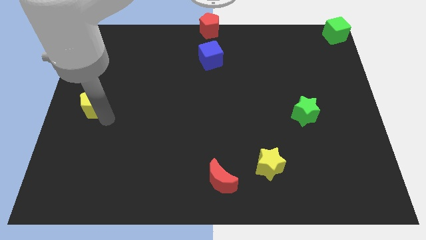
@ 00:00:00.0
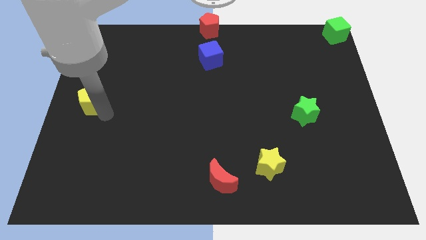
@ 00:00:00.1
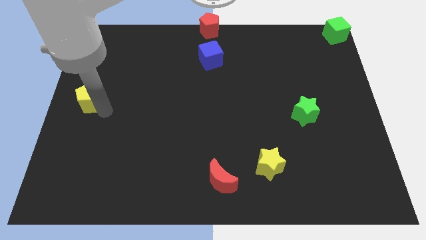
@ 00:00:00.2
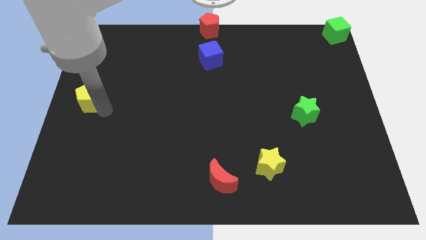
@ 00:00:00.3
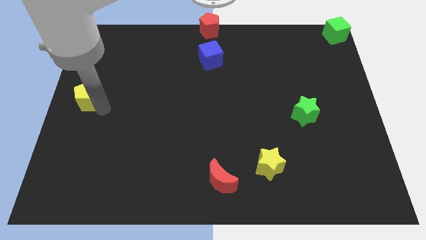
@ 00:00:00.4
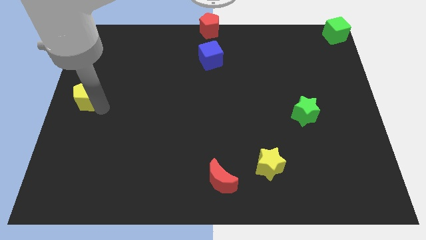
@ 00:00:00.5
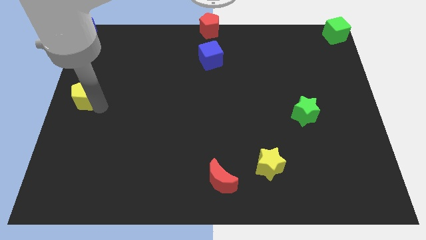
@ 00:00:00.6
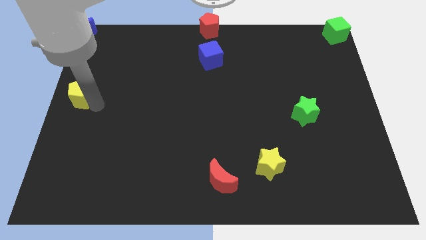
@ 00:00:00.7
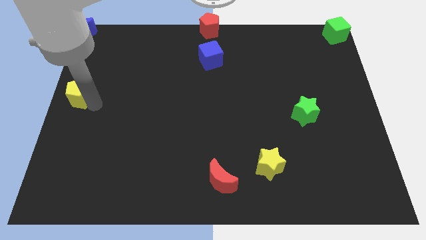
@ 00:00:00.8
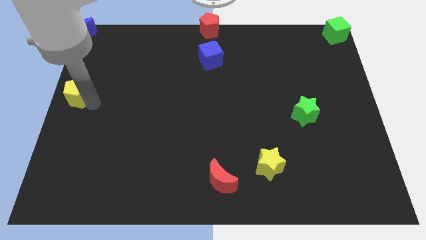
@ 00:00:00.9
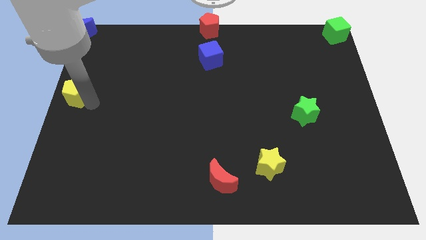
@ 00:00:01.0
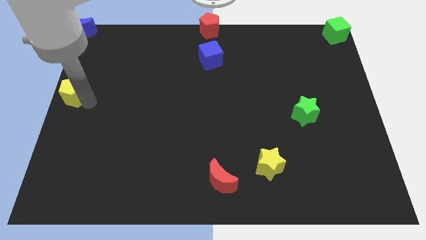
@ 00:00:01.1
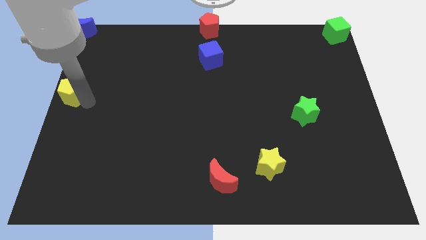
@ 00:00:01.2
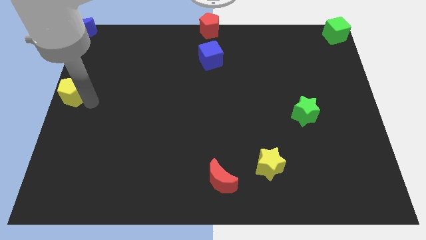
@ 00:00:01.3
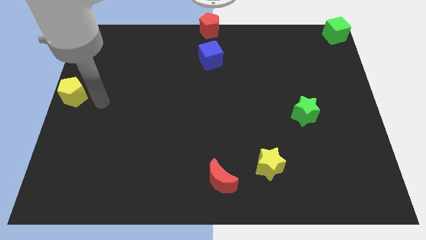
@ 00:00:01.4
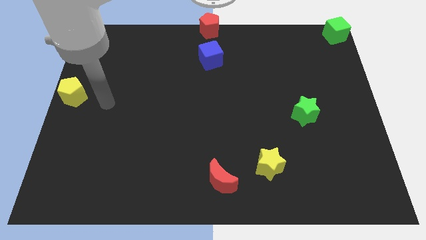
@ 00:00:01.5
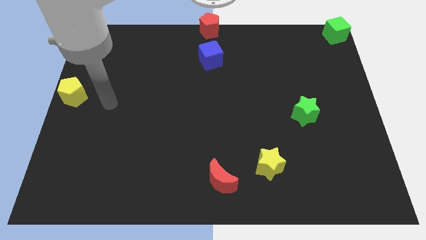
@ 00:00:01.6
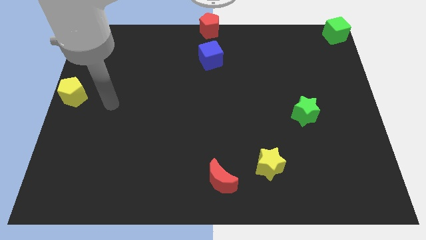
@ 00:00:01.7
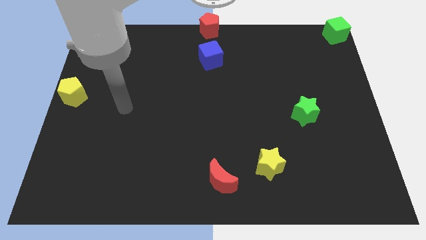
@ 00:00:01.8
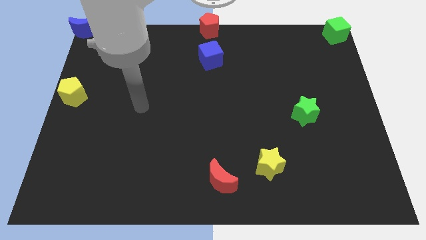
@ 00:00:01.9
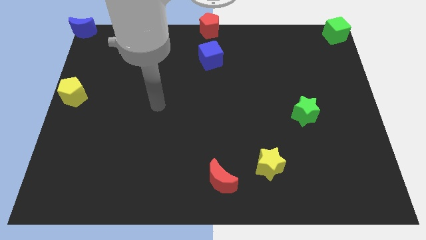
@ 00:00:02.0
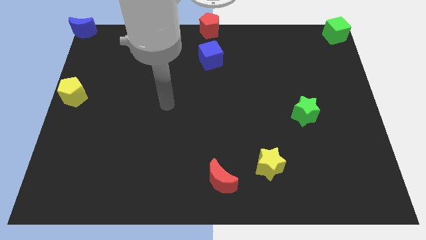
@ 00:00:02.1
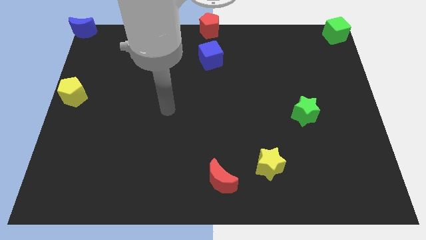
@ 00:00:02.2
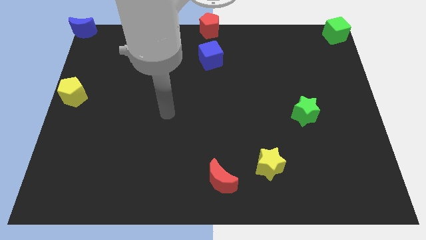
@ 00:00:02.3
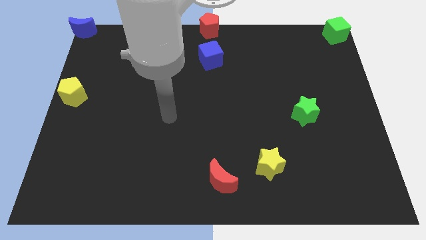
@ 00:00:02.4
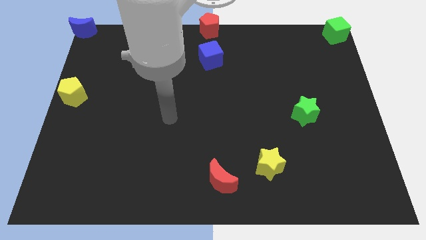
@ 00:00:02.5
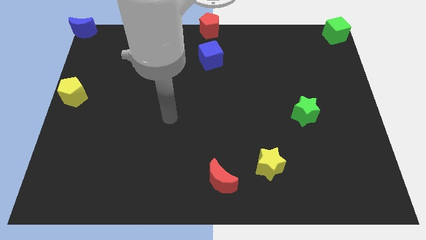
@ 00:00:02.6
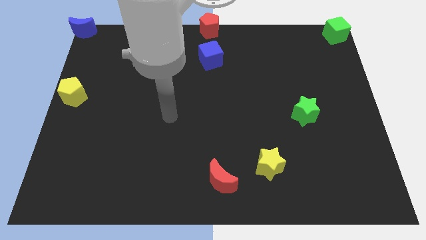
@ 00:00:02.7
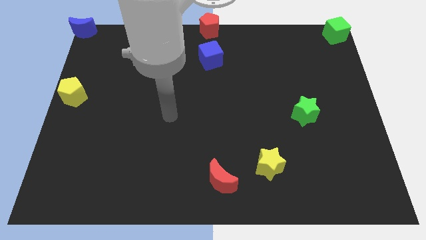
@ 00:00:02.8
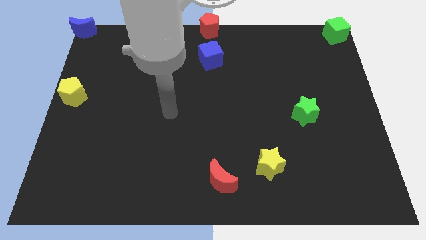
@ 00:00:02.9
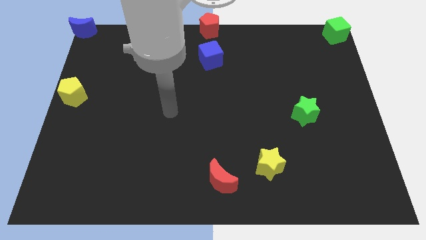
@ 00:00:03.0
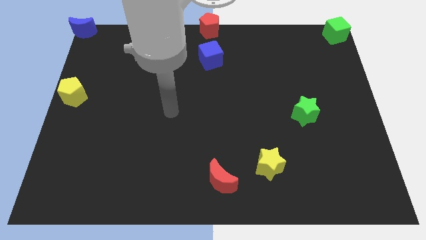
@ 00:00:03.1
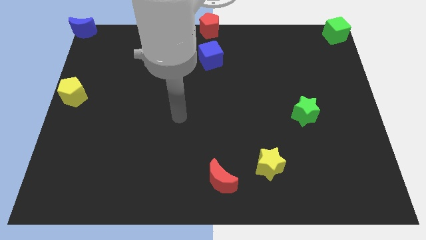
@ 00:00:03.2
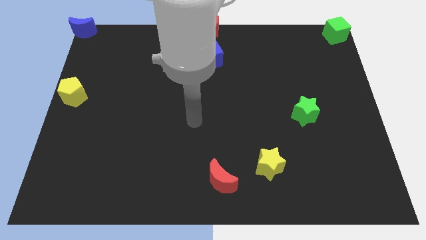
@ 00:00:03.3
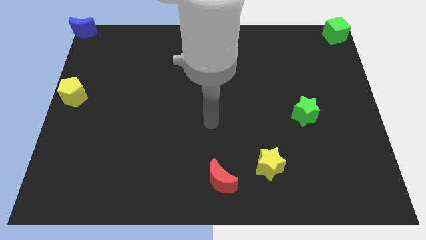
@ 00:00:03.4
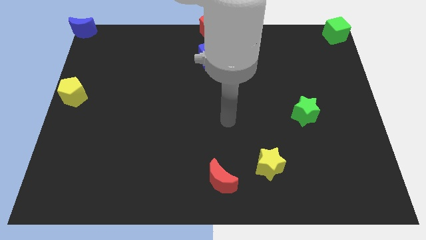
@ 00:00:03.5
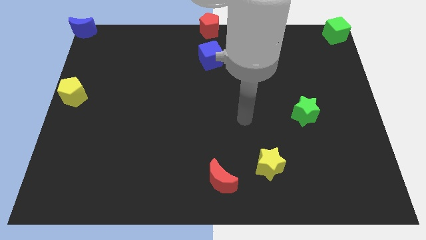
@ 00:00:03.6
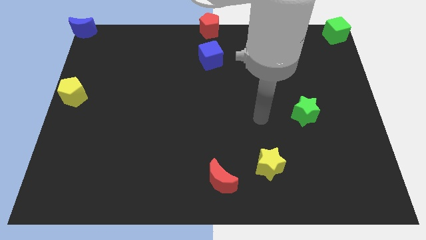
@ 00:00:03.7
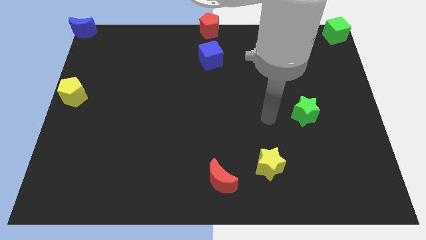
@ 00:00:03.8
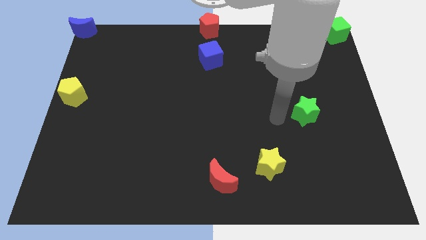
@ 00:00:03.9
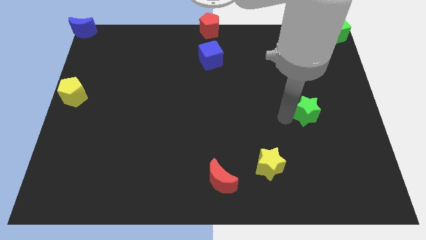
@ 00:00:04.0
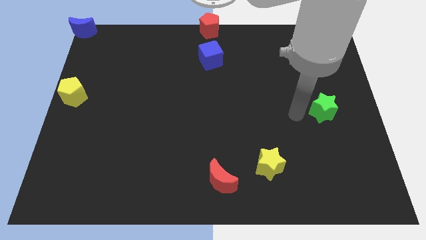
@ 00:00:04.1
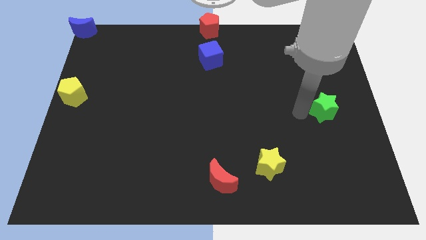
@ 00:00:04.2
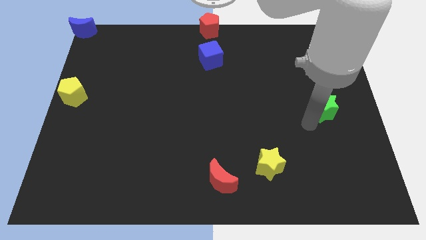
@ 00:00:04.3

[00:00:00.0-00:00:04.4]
move the green star to the center right of the board

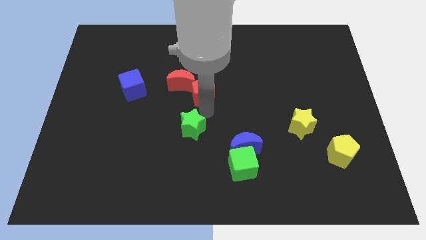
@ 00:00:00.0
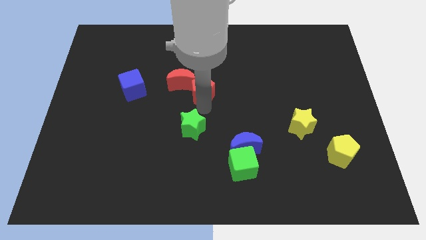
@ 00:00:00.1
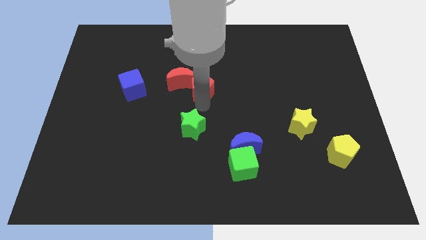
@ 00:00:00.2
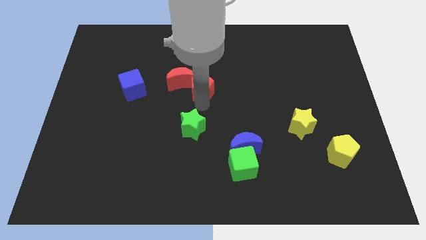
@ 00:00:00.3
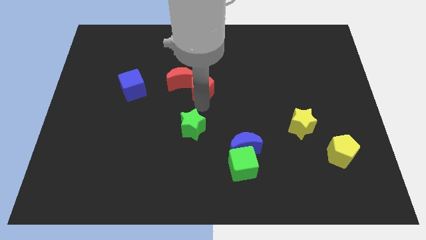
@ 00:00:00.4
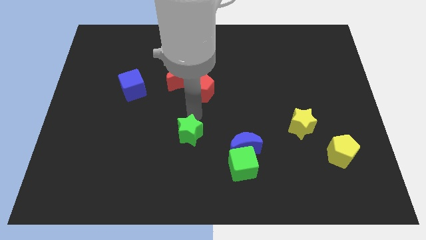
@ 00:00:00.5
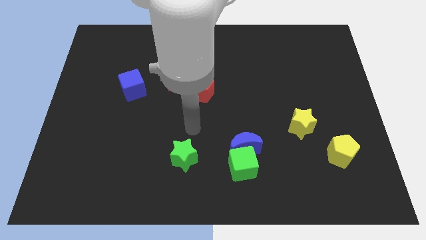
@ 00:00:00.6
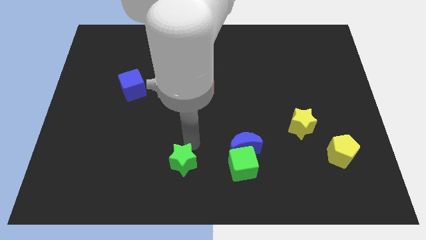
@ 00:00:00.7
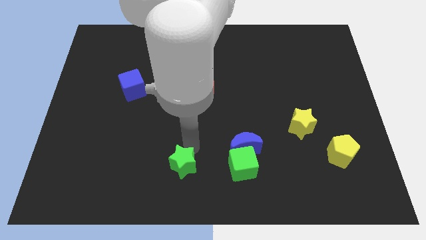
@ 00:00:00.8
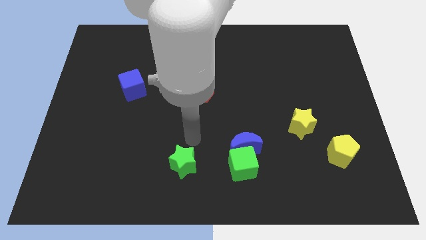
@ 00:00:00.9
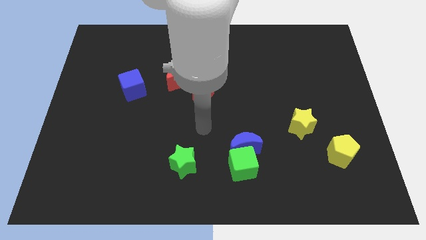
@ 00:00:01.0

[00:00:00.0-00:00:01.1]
slide green star down to left of green cube

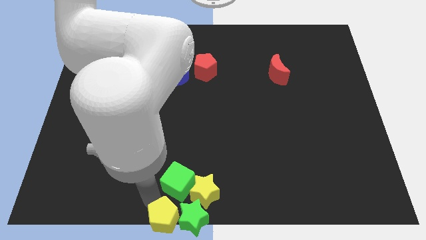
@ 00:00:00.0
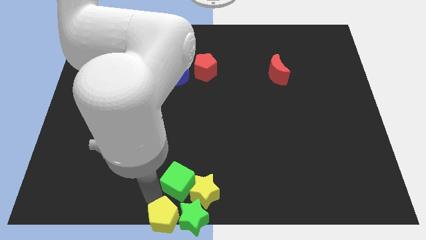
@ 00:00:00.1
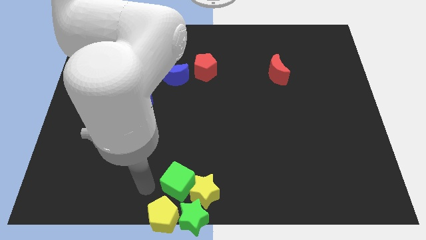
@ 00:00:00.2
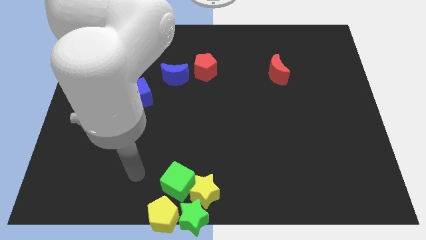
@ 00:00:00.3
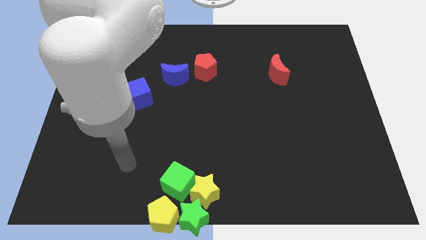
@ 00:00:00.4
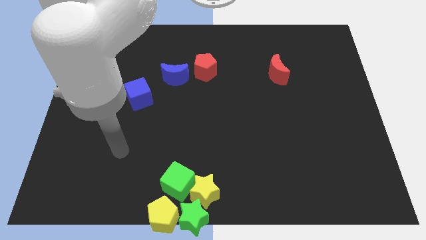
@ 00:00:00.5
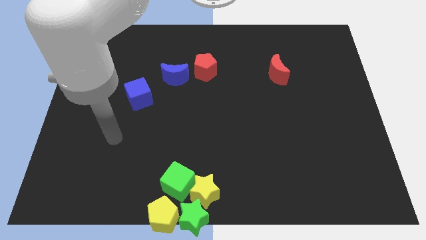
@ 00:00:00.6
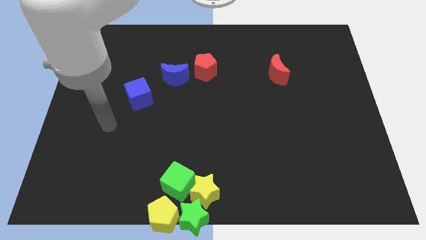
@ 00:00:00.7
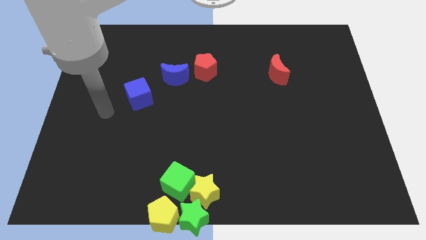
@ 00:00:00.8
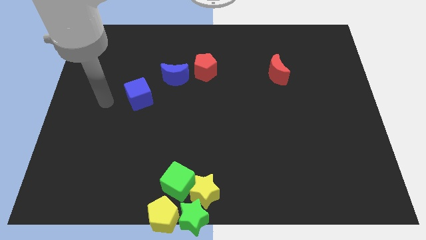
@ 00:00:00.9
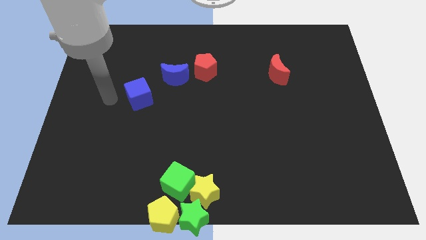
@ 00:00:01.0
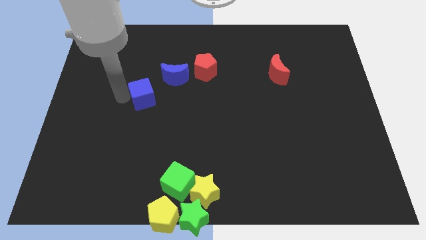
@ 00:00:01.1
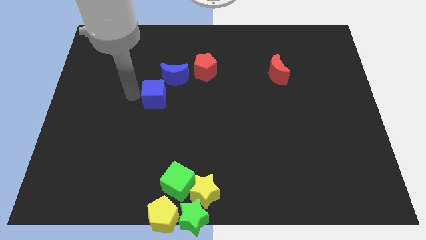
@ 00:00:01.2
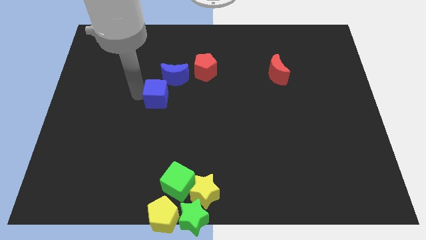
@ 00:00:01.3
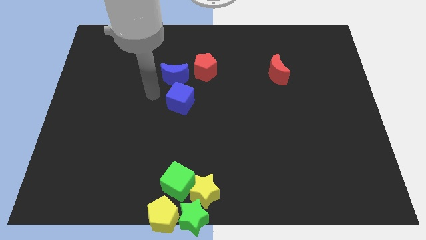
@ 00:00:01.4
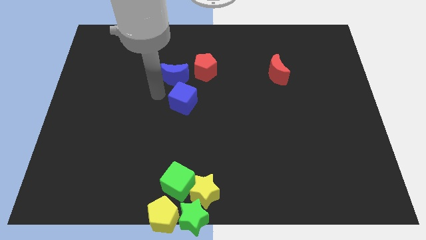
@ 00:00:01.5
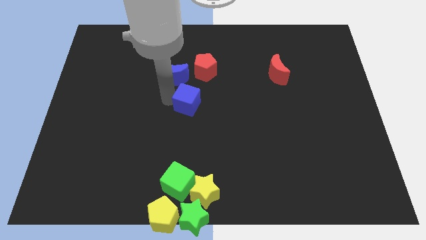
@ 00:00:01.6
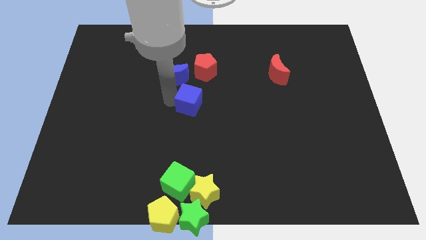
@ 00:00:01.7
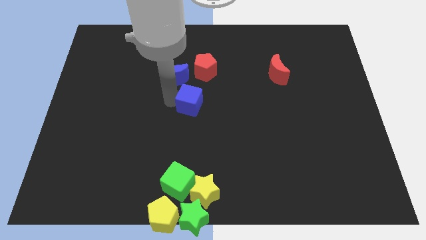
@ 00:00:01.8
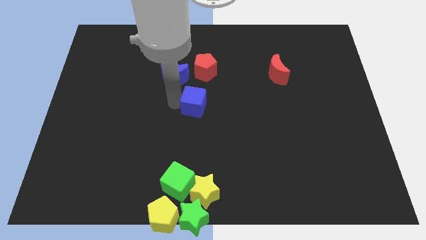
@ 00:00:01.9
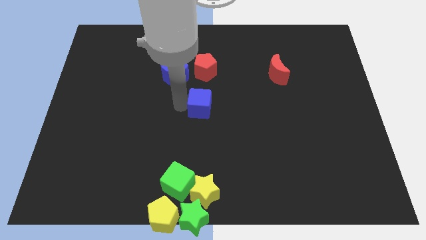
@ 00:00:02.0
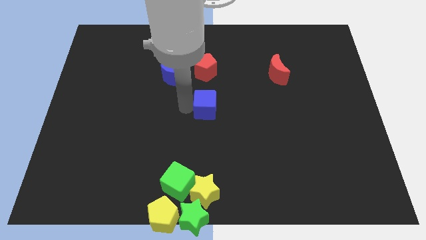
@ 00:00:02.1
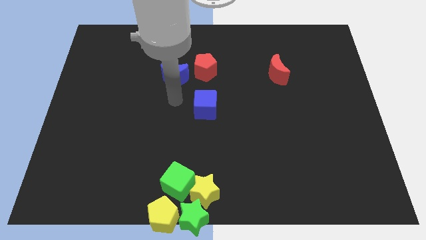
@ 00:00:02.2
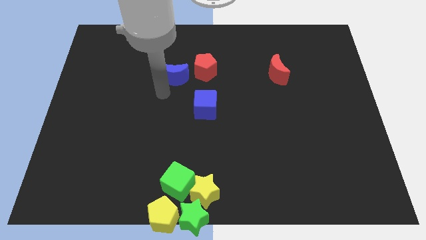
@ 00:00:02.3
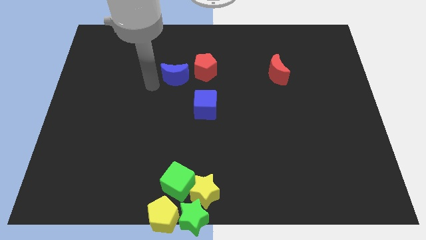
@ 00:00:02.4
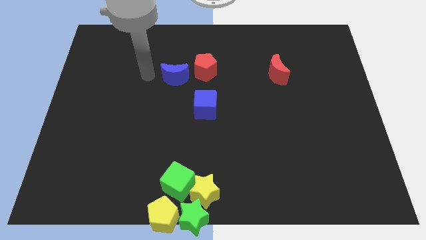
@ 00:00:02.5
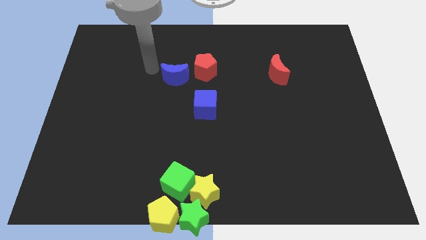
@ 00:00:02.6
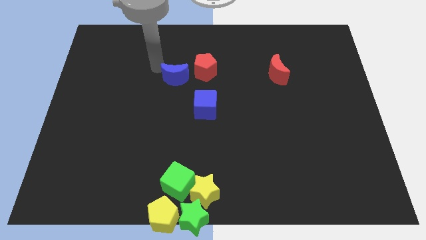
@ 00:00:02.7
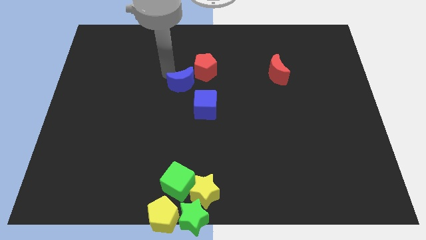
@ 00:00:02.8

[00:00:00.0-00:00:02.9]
place the blue cube at the center of the board

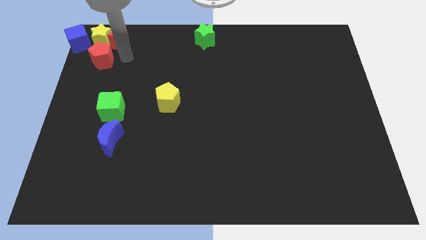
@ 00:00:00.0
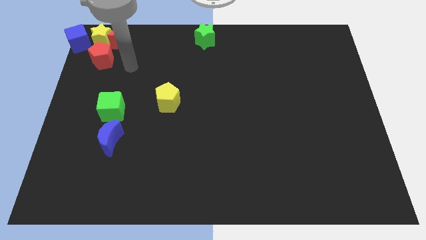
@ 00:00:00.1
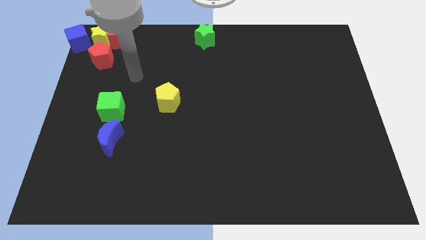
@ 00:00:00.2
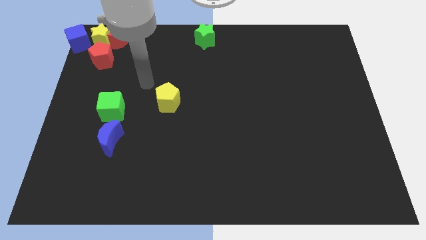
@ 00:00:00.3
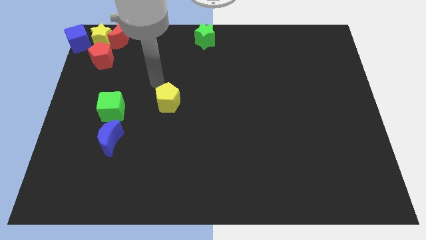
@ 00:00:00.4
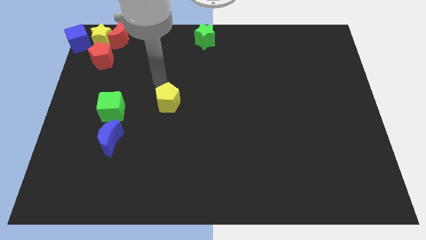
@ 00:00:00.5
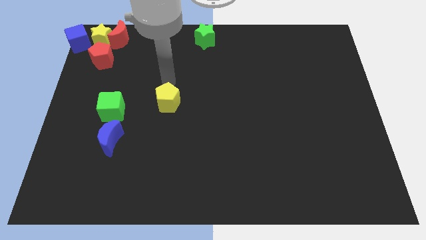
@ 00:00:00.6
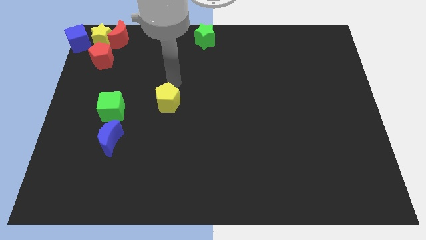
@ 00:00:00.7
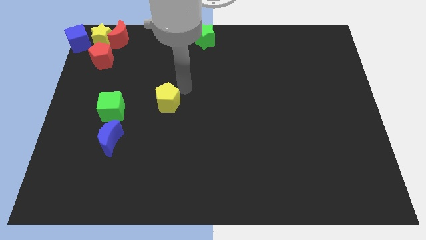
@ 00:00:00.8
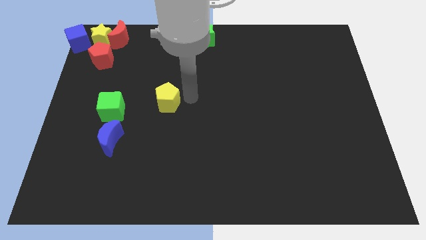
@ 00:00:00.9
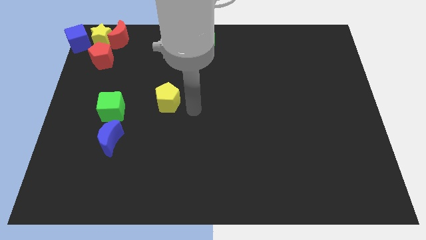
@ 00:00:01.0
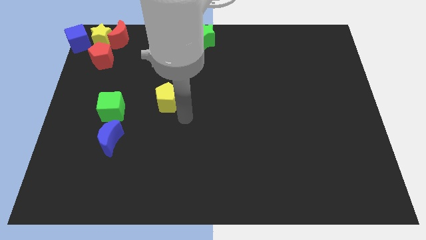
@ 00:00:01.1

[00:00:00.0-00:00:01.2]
point your arm at the right of the yellow pentagon
